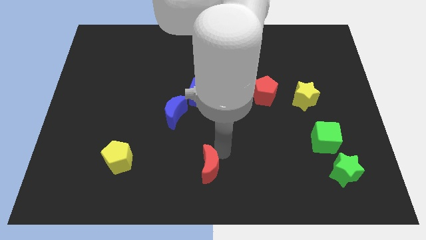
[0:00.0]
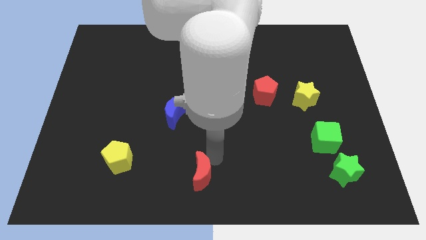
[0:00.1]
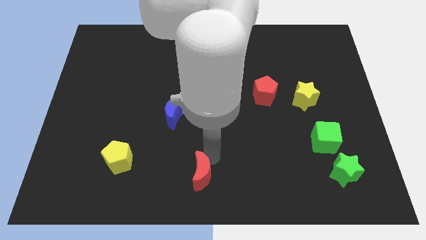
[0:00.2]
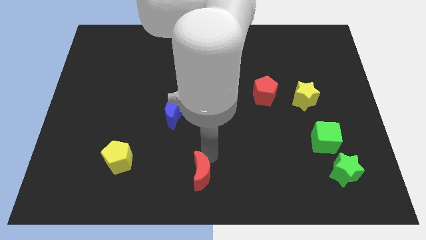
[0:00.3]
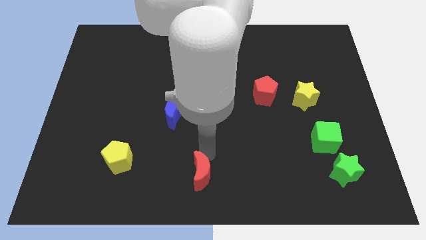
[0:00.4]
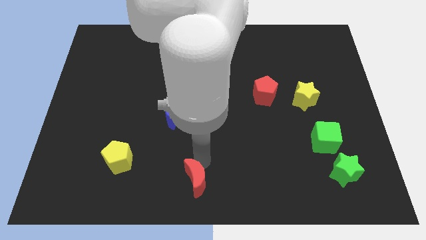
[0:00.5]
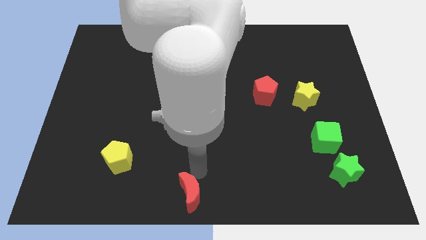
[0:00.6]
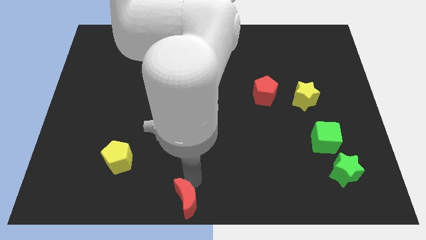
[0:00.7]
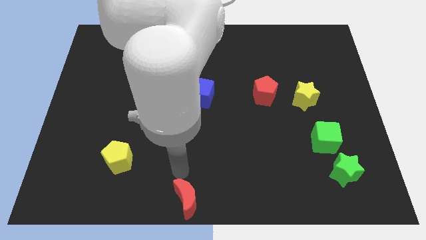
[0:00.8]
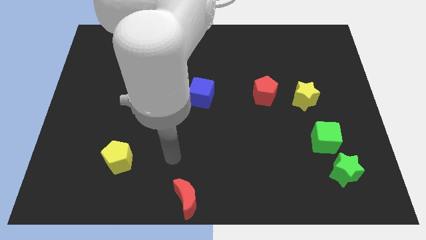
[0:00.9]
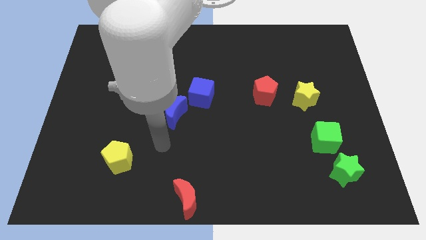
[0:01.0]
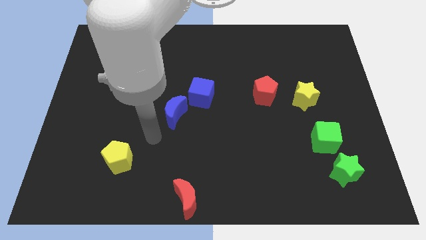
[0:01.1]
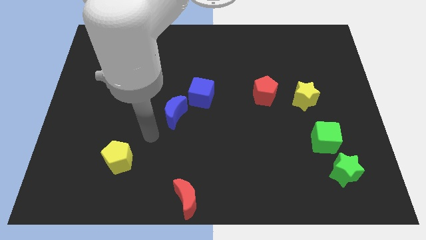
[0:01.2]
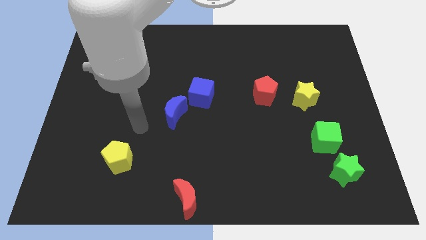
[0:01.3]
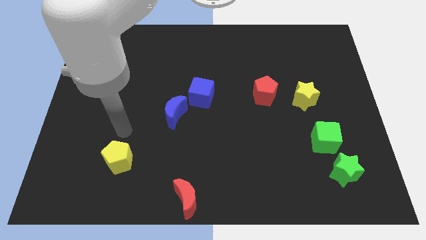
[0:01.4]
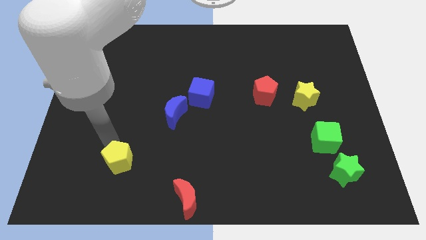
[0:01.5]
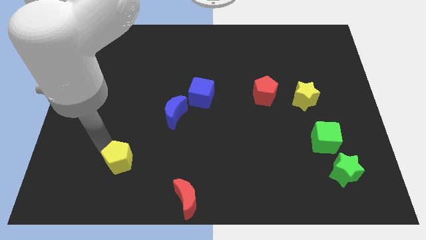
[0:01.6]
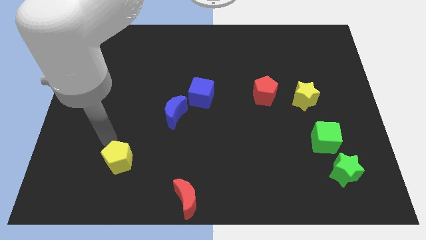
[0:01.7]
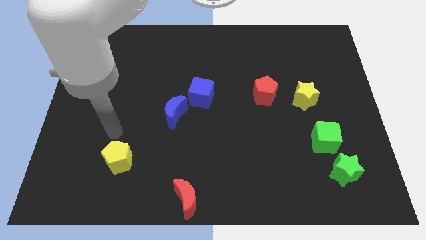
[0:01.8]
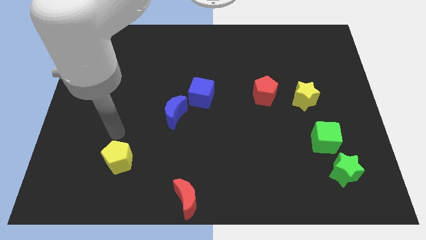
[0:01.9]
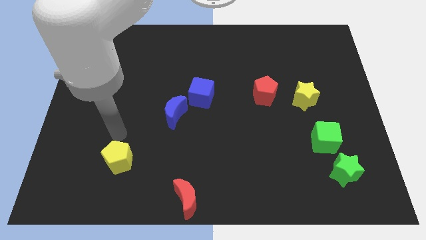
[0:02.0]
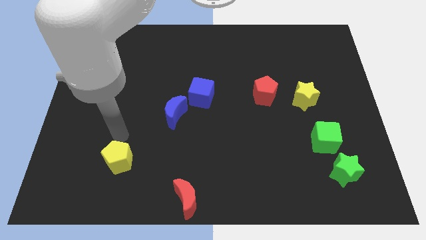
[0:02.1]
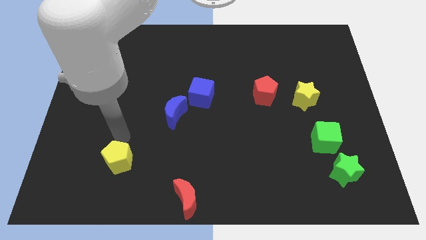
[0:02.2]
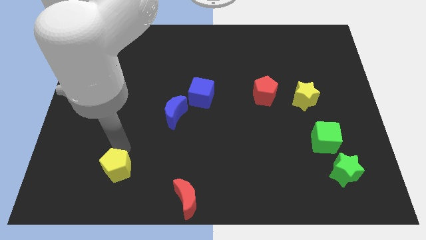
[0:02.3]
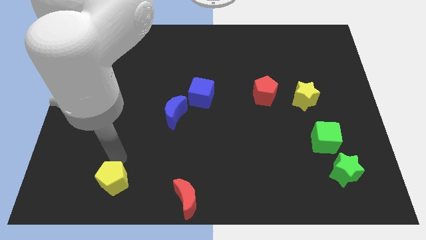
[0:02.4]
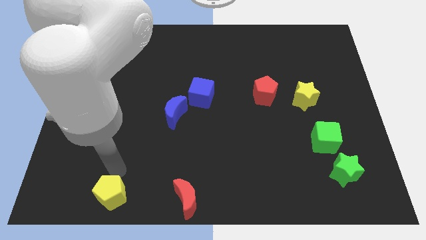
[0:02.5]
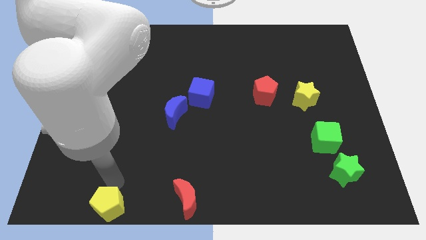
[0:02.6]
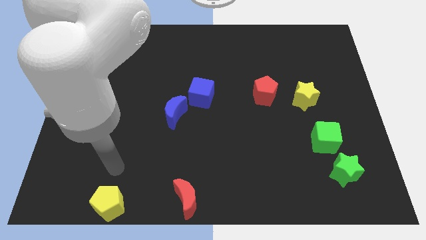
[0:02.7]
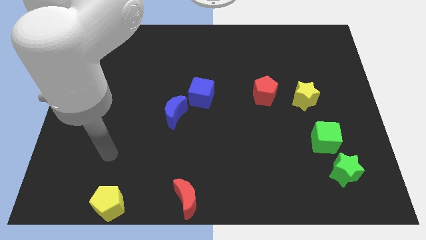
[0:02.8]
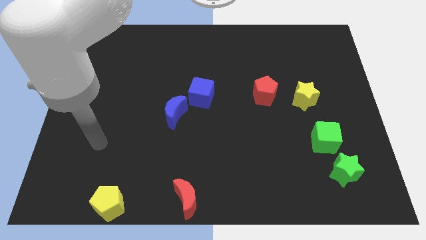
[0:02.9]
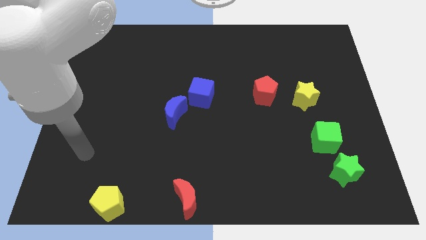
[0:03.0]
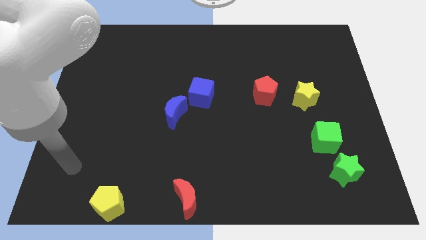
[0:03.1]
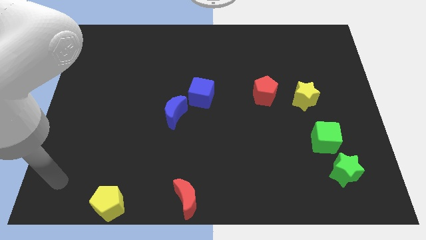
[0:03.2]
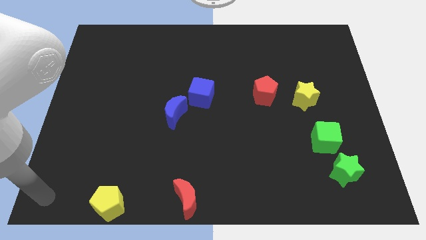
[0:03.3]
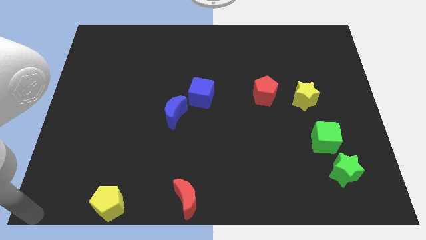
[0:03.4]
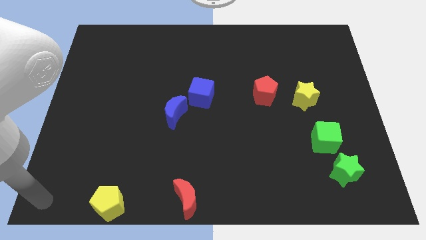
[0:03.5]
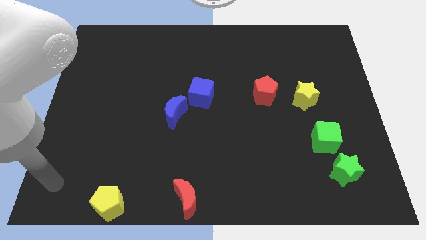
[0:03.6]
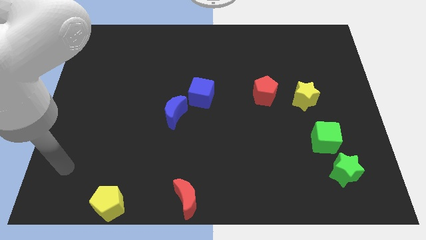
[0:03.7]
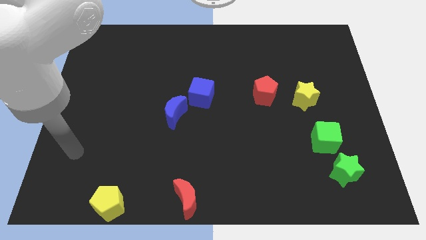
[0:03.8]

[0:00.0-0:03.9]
push the red crescent and yellow pentagon to the bottom left of the board

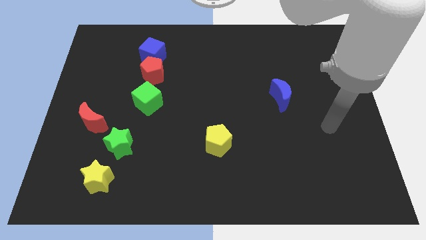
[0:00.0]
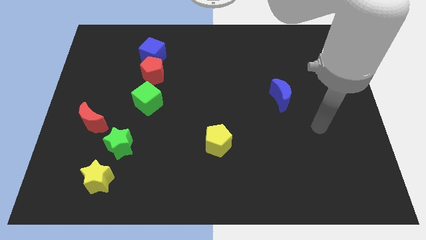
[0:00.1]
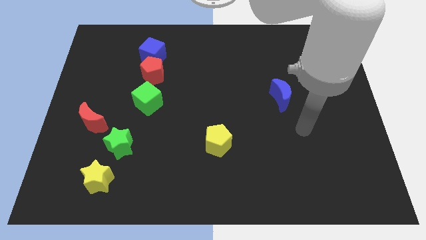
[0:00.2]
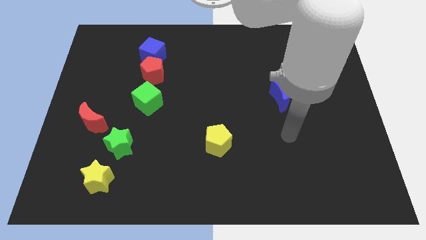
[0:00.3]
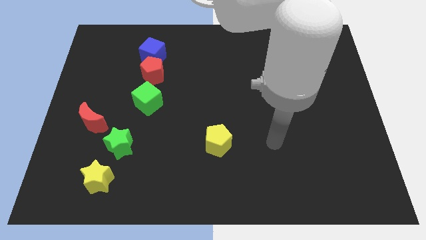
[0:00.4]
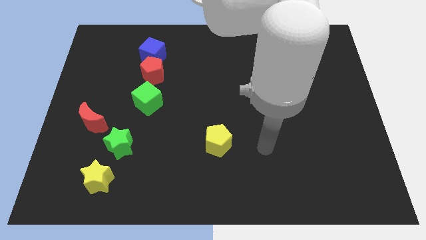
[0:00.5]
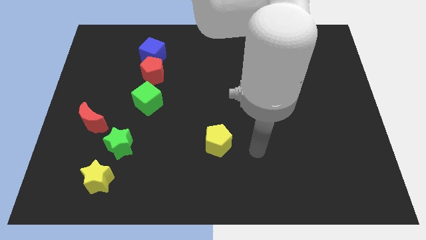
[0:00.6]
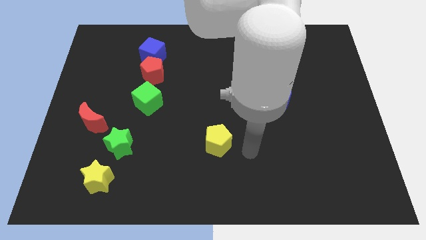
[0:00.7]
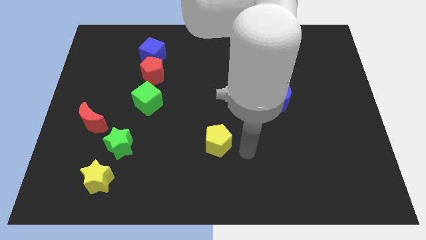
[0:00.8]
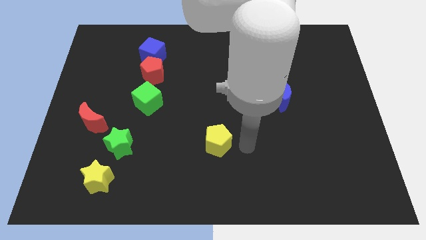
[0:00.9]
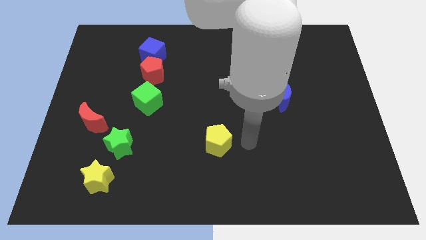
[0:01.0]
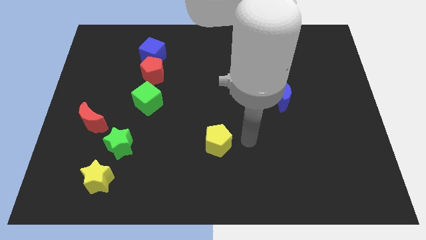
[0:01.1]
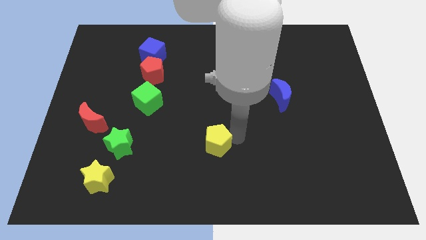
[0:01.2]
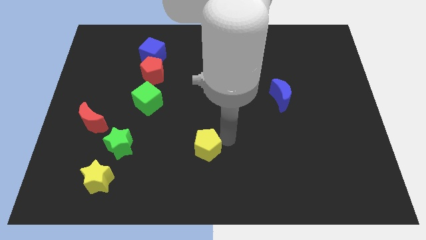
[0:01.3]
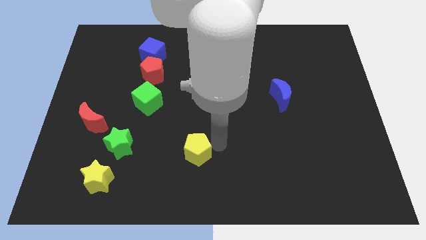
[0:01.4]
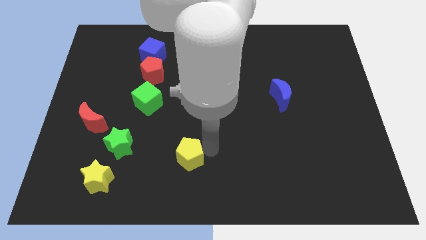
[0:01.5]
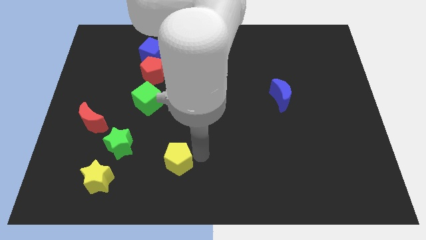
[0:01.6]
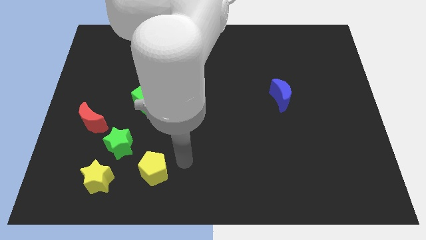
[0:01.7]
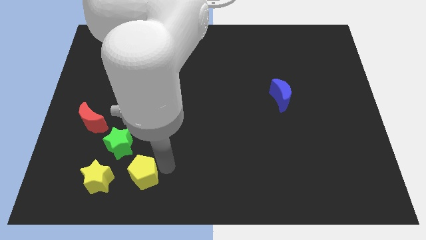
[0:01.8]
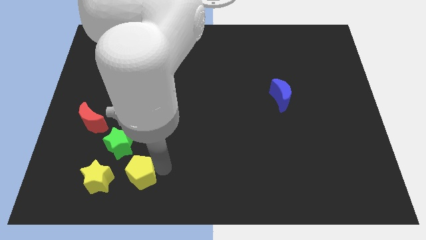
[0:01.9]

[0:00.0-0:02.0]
move the yellow pentagon towards the yellow star

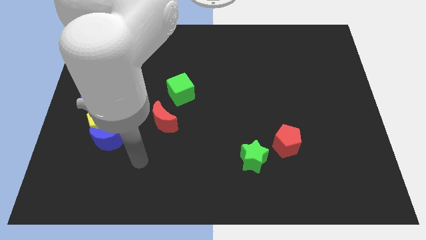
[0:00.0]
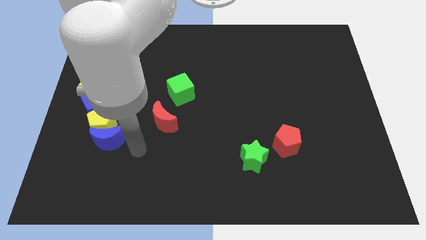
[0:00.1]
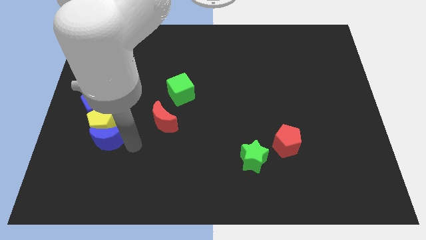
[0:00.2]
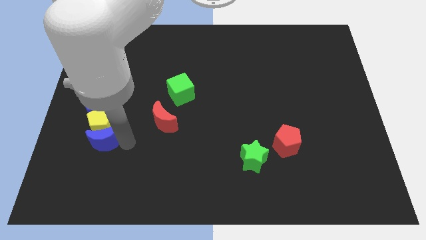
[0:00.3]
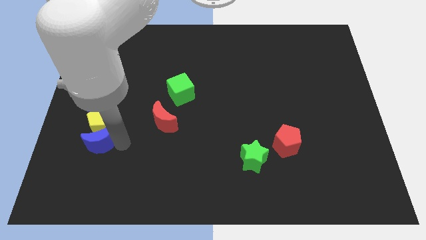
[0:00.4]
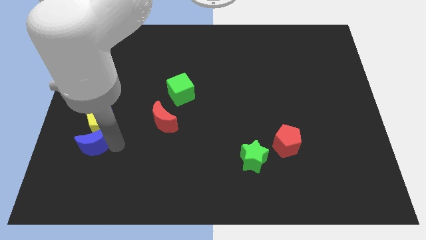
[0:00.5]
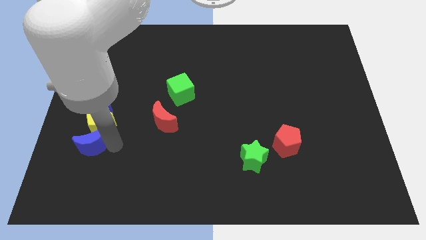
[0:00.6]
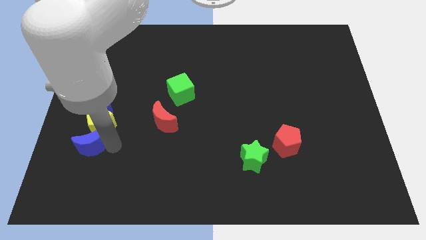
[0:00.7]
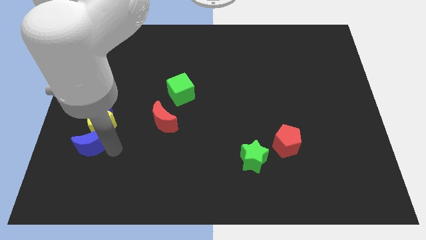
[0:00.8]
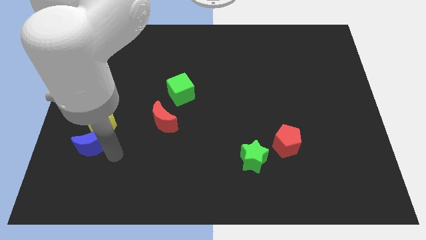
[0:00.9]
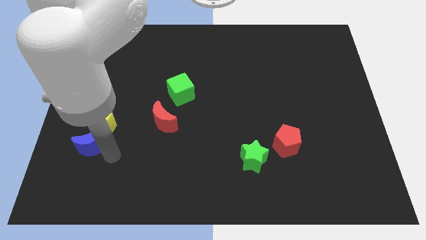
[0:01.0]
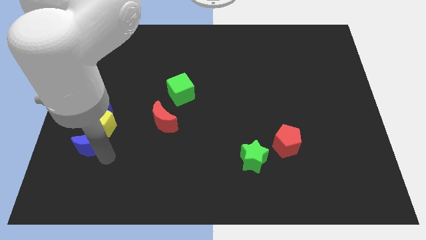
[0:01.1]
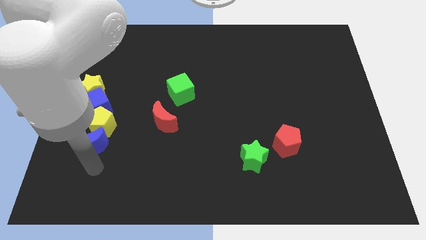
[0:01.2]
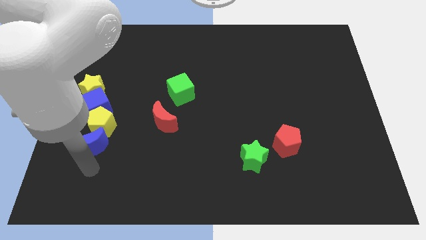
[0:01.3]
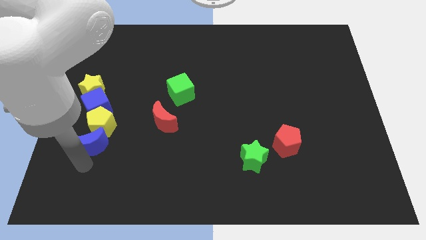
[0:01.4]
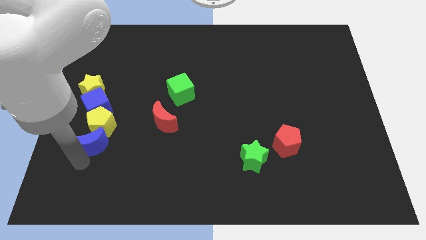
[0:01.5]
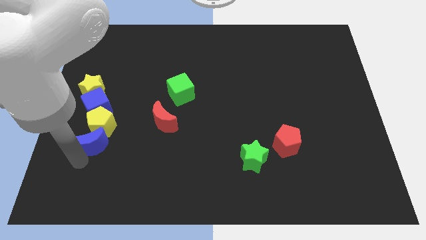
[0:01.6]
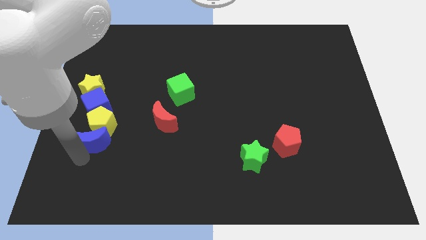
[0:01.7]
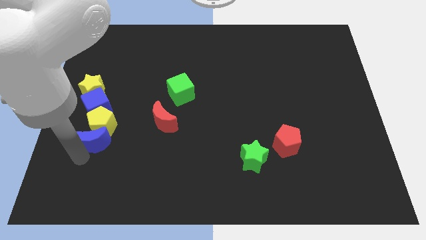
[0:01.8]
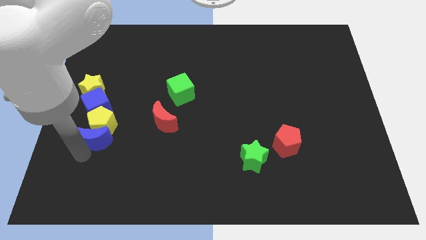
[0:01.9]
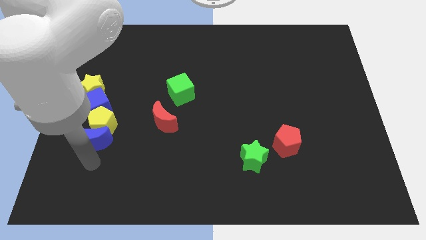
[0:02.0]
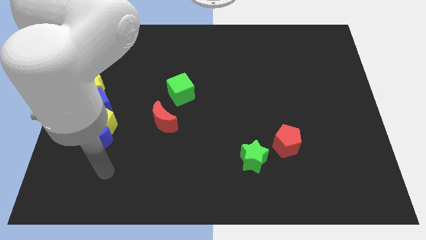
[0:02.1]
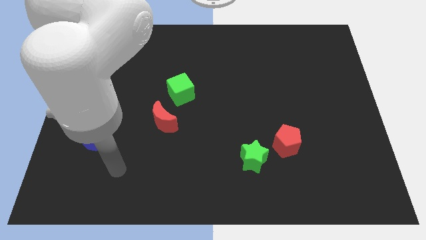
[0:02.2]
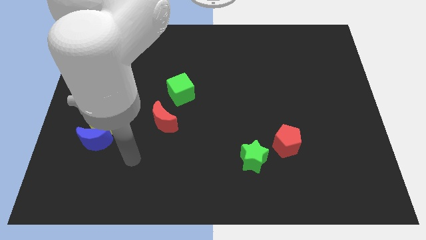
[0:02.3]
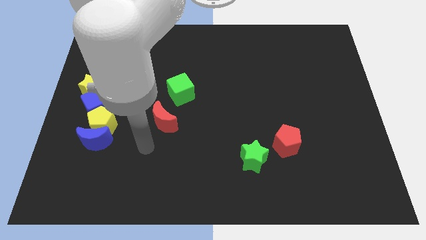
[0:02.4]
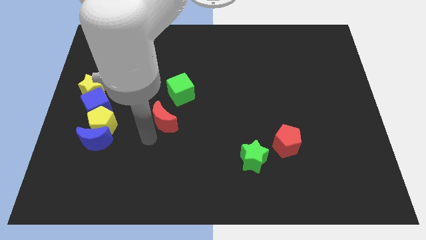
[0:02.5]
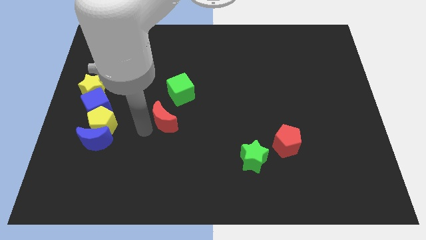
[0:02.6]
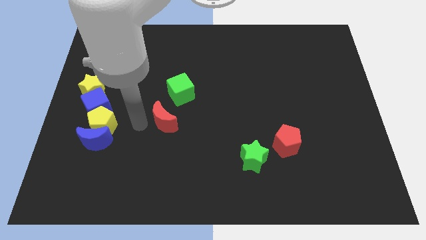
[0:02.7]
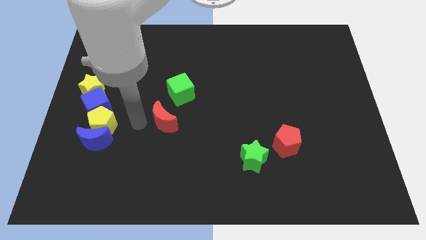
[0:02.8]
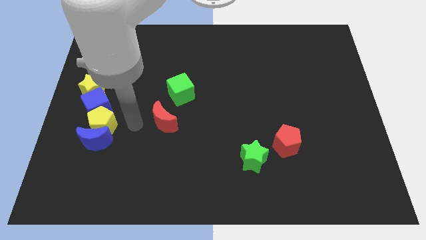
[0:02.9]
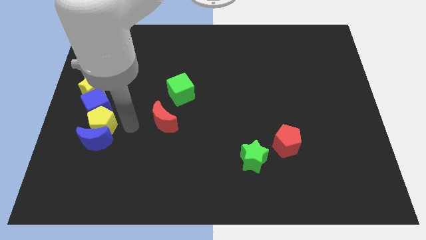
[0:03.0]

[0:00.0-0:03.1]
push the blue crescent into the yellow pentagon
